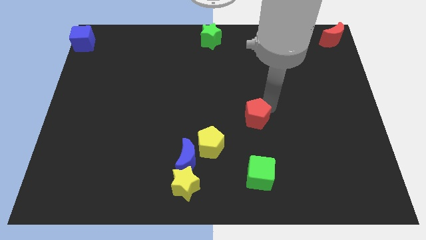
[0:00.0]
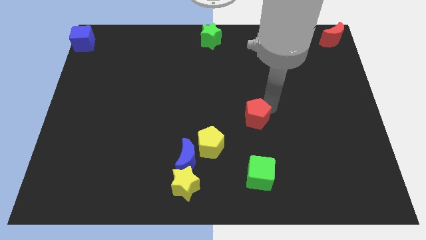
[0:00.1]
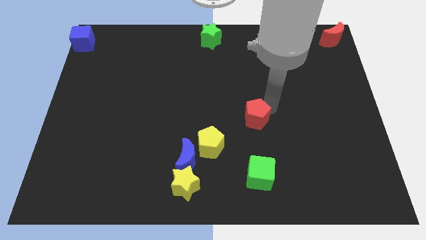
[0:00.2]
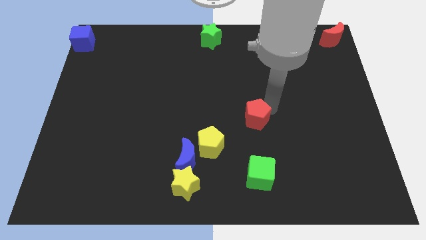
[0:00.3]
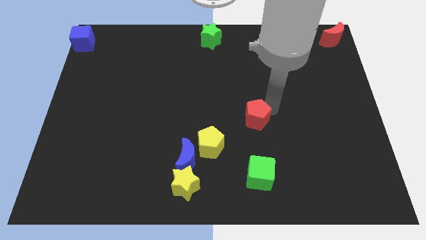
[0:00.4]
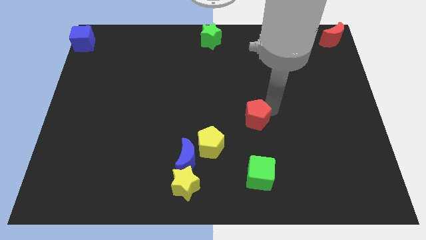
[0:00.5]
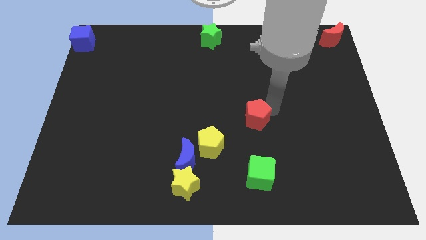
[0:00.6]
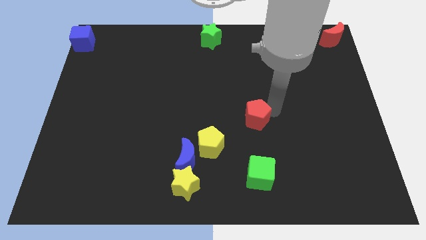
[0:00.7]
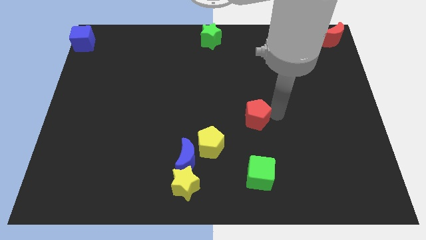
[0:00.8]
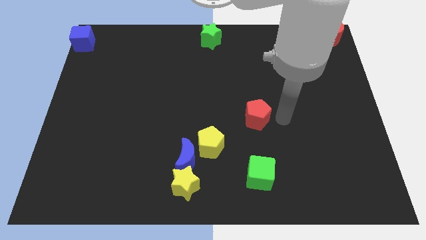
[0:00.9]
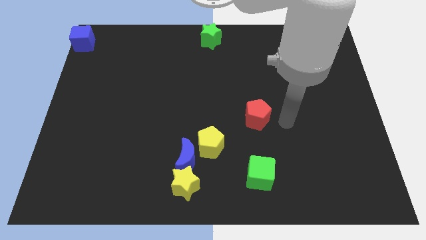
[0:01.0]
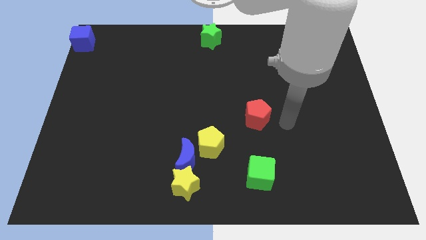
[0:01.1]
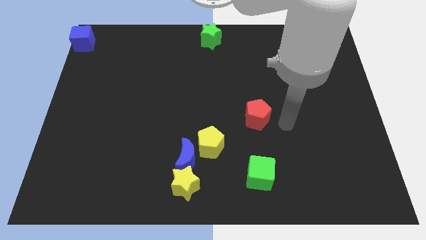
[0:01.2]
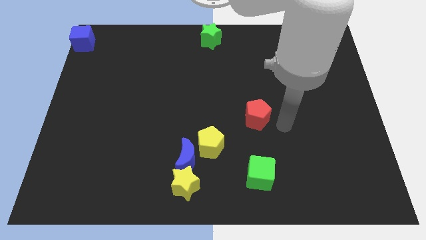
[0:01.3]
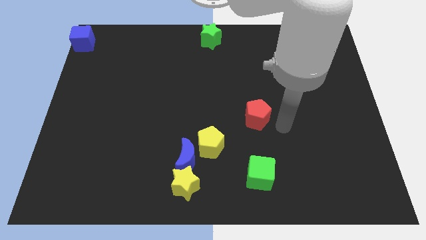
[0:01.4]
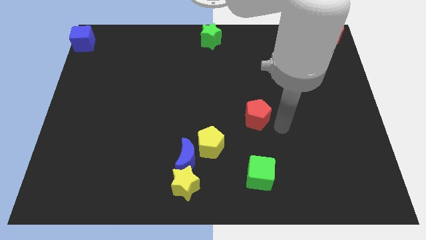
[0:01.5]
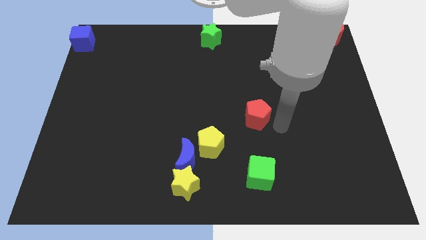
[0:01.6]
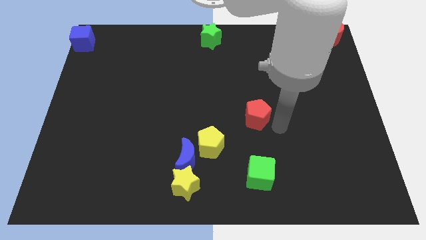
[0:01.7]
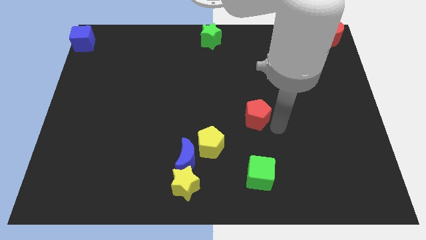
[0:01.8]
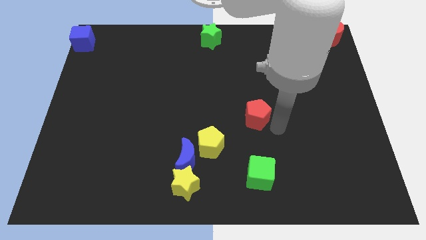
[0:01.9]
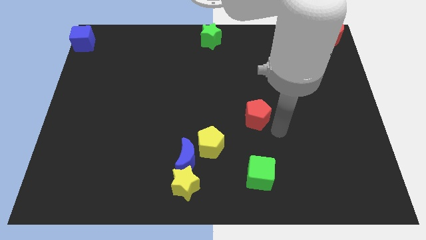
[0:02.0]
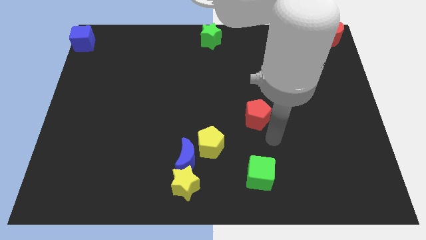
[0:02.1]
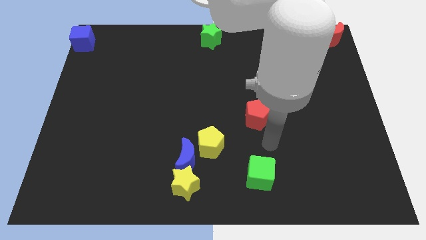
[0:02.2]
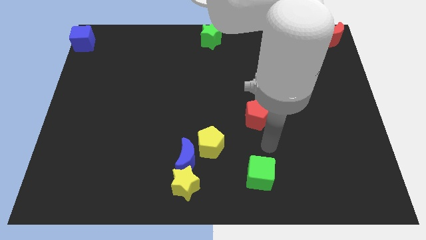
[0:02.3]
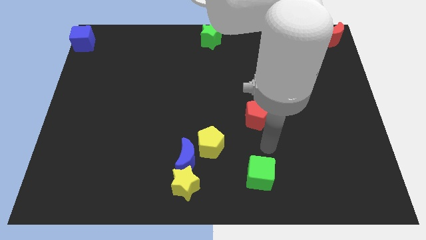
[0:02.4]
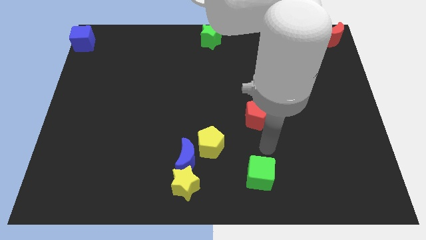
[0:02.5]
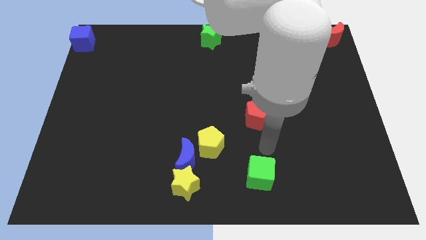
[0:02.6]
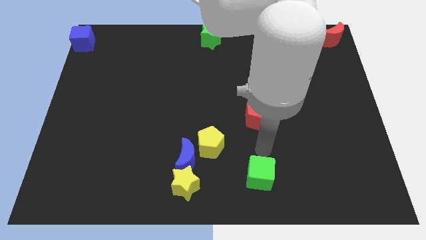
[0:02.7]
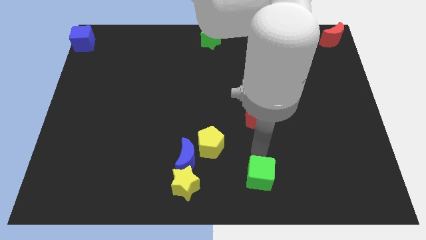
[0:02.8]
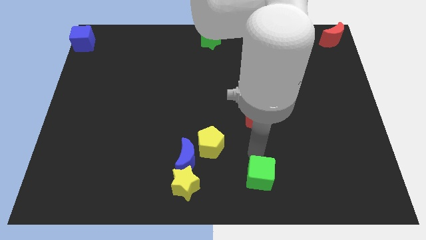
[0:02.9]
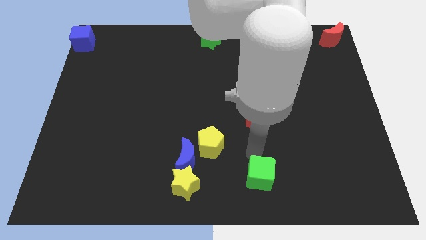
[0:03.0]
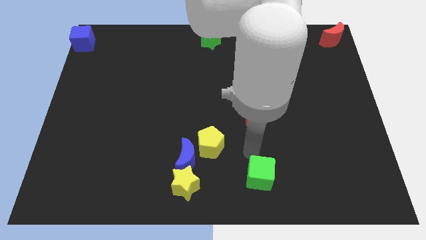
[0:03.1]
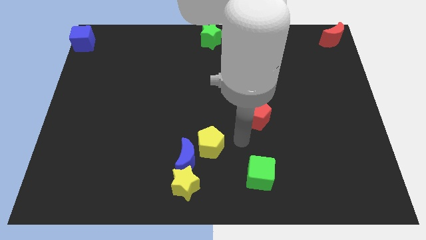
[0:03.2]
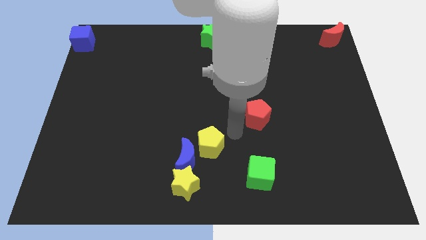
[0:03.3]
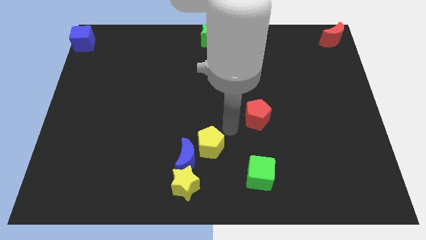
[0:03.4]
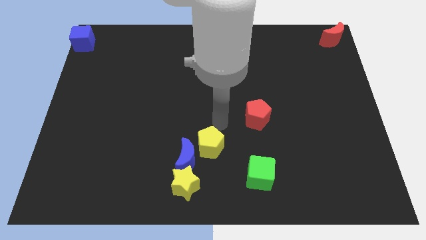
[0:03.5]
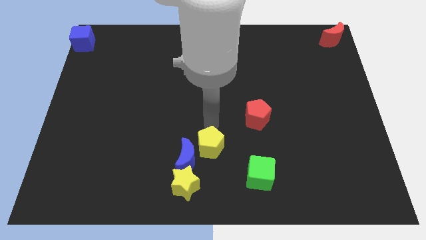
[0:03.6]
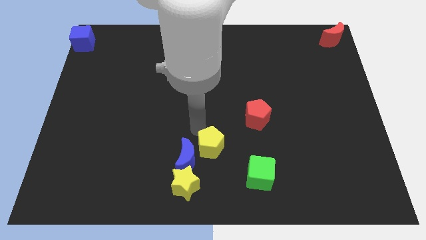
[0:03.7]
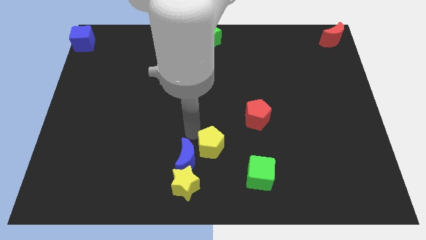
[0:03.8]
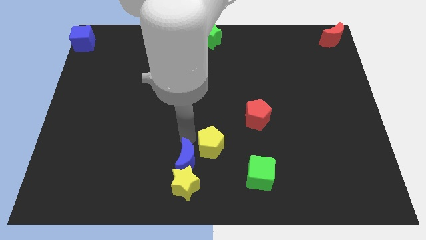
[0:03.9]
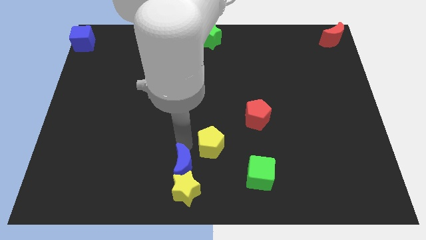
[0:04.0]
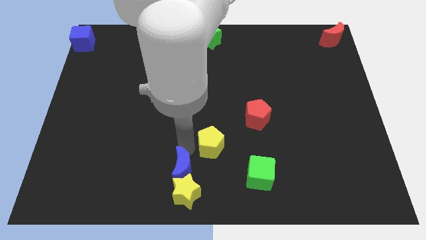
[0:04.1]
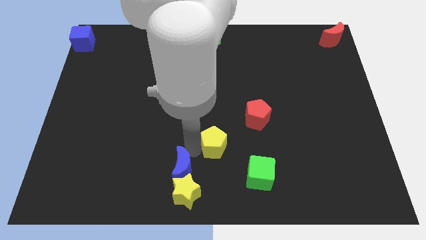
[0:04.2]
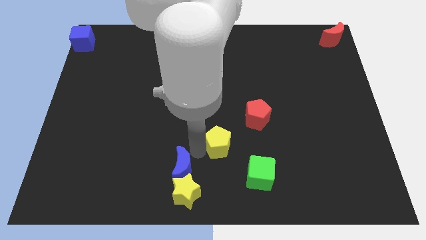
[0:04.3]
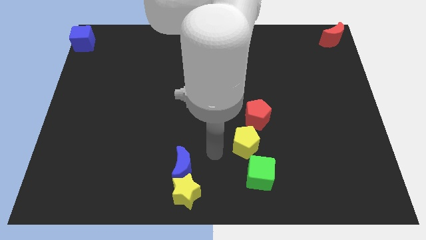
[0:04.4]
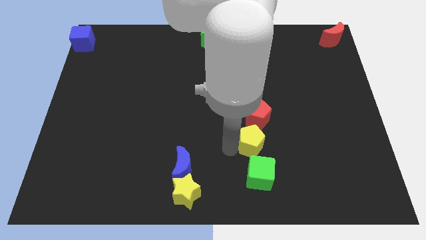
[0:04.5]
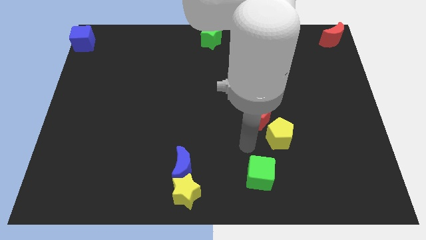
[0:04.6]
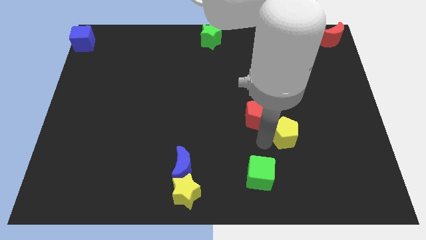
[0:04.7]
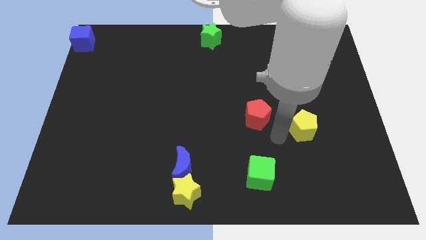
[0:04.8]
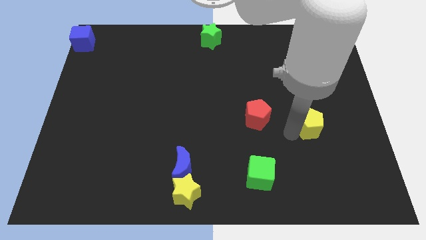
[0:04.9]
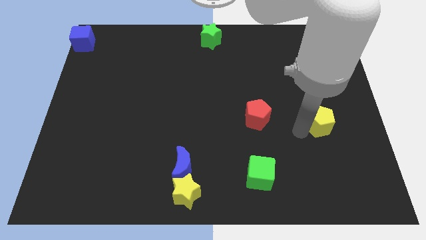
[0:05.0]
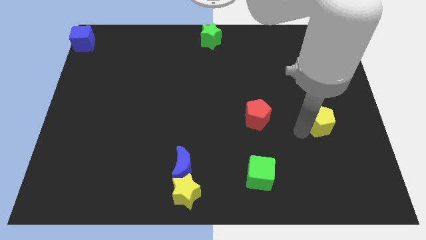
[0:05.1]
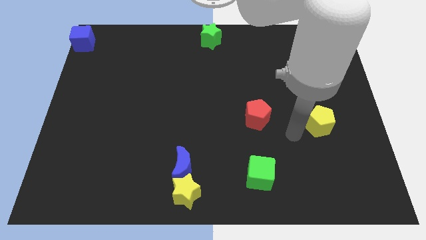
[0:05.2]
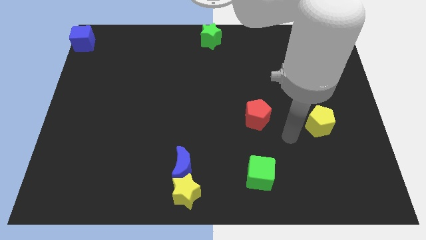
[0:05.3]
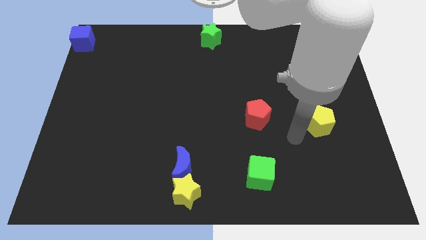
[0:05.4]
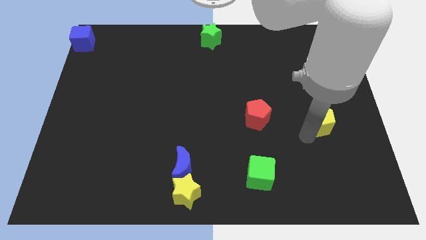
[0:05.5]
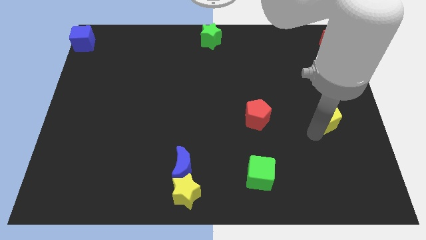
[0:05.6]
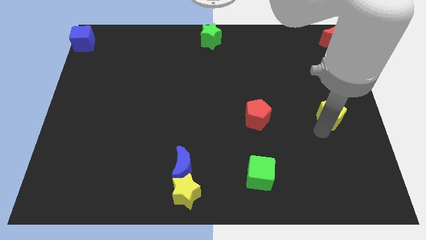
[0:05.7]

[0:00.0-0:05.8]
move the yellow pentagon to the right of the red pentagon

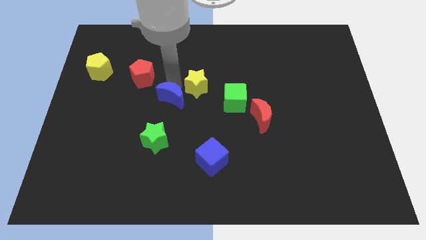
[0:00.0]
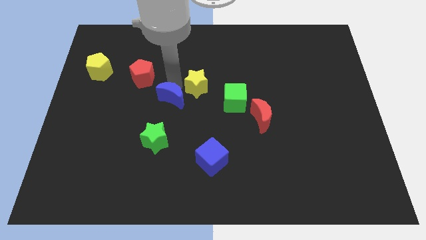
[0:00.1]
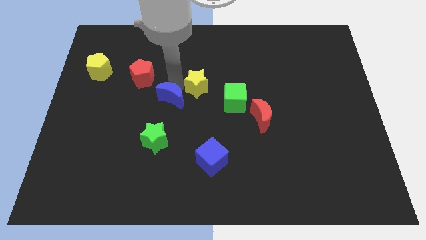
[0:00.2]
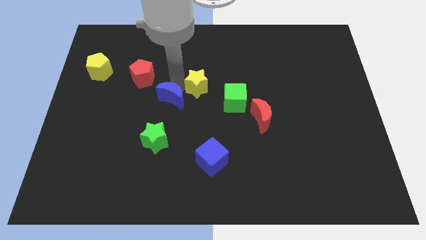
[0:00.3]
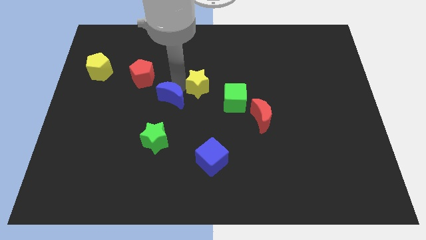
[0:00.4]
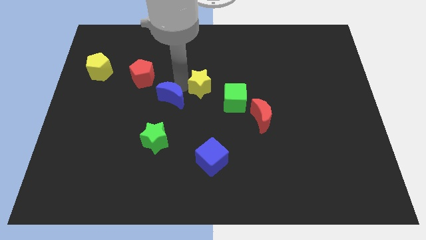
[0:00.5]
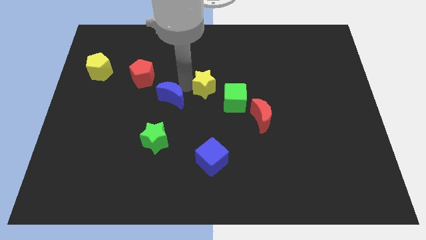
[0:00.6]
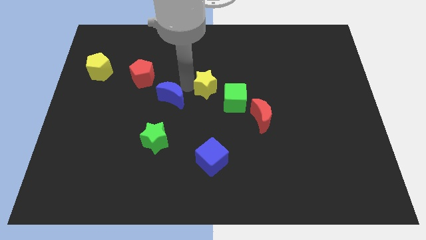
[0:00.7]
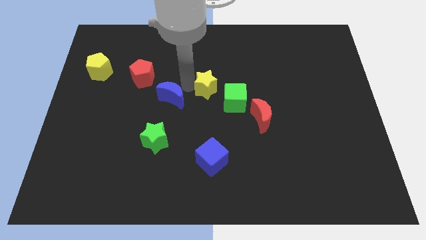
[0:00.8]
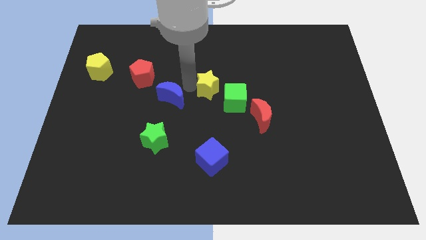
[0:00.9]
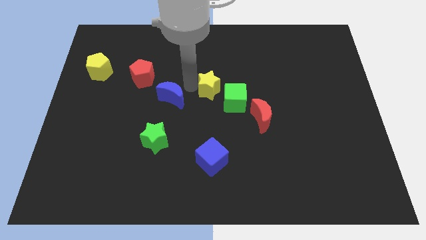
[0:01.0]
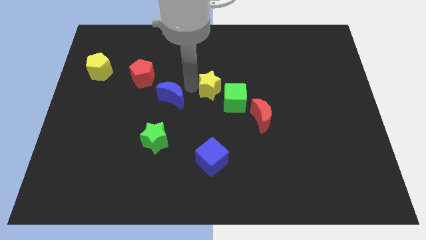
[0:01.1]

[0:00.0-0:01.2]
move the yellow star above the blue cube

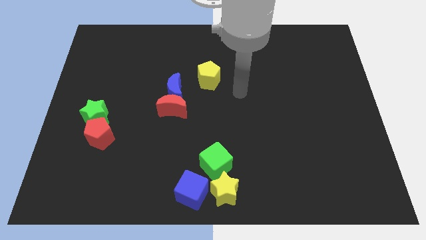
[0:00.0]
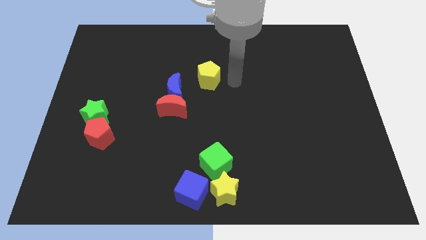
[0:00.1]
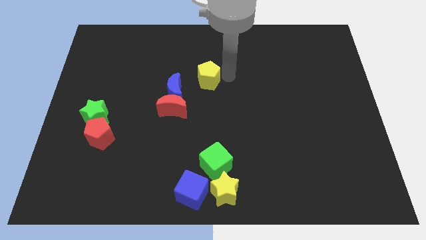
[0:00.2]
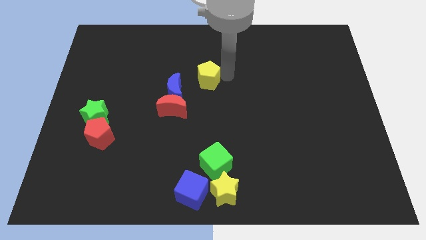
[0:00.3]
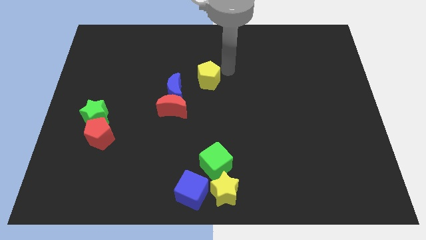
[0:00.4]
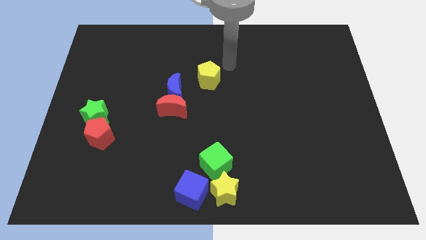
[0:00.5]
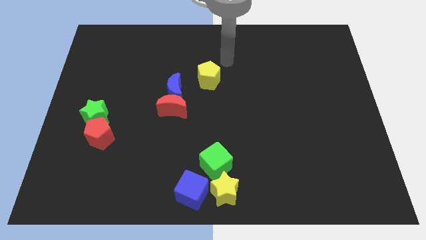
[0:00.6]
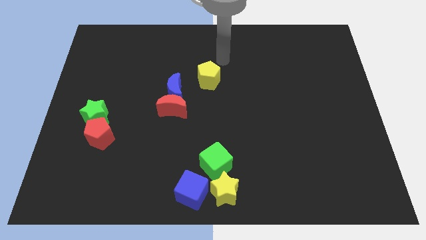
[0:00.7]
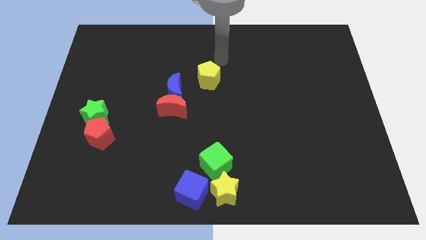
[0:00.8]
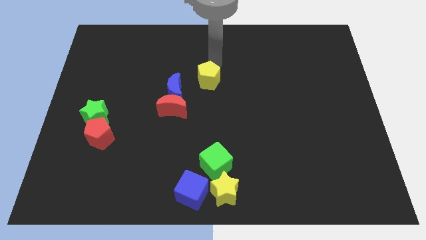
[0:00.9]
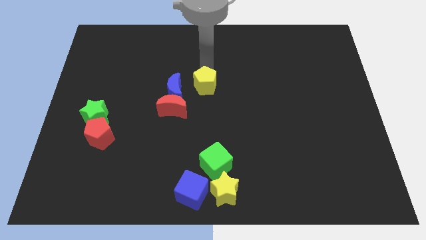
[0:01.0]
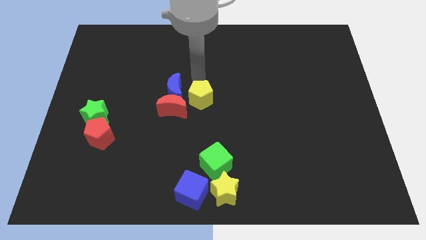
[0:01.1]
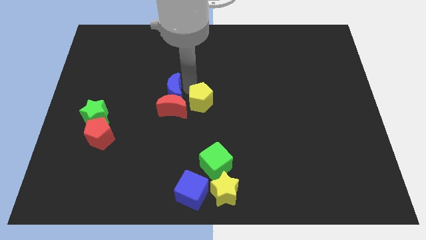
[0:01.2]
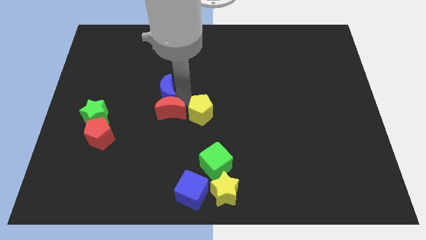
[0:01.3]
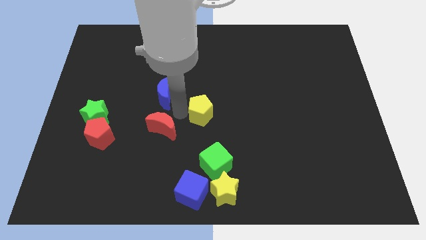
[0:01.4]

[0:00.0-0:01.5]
push the yellow pentagon downward

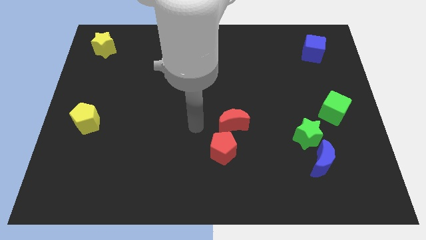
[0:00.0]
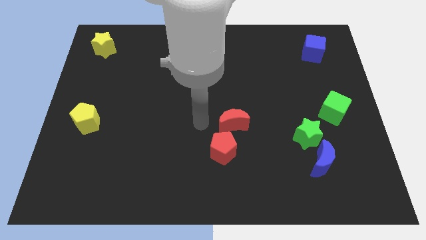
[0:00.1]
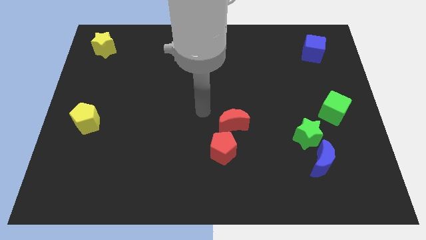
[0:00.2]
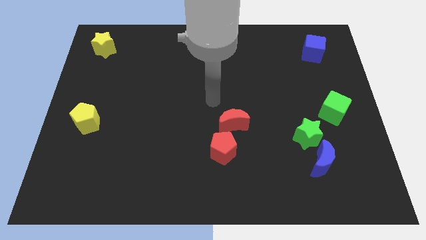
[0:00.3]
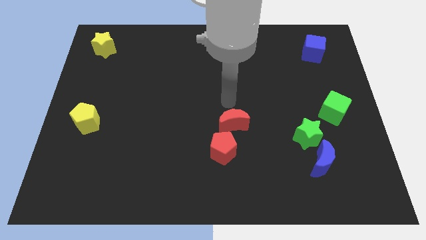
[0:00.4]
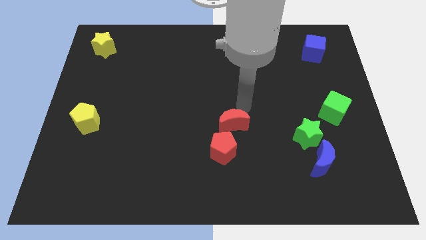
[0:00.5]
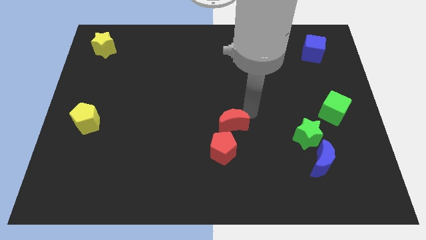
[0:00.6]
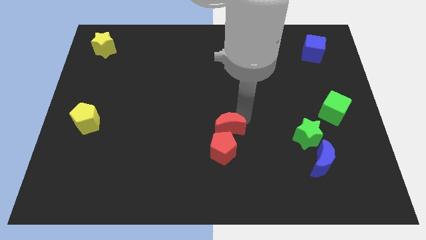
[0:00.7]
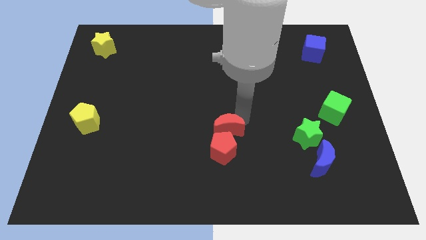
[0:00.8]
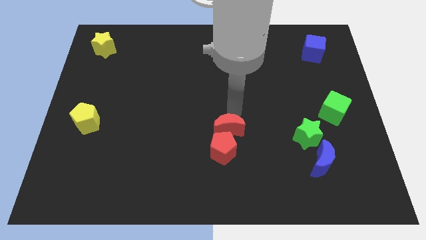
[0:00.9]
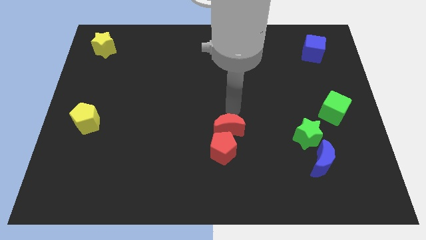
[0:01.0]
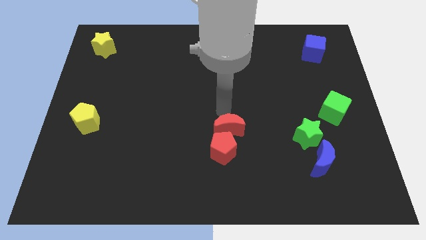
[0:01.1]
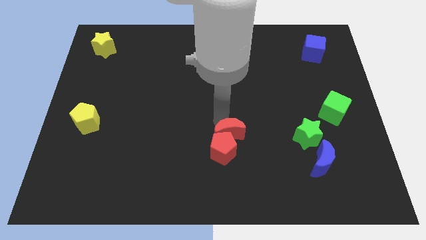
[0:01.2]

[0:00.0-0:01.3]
move the red crescent close to the top of the red pentagon
